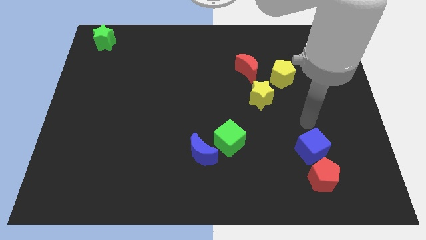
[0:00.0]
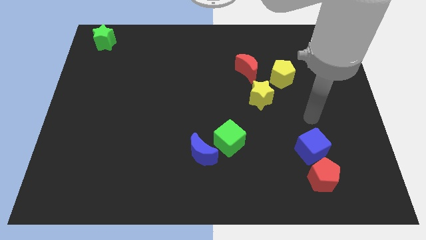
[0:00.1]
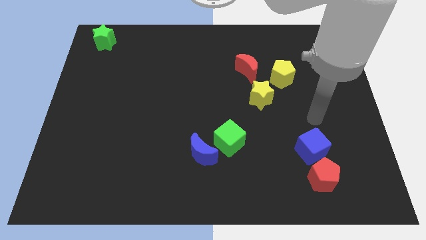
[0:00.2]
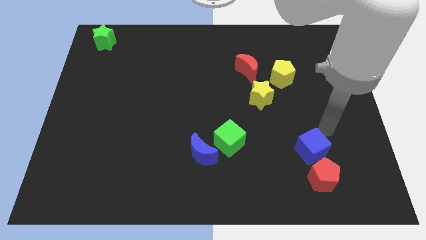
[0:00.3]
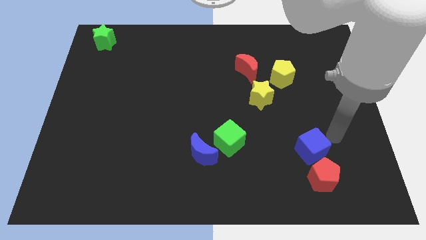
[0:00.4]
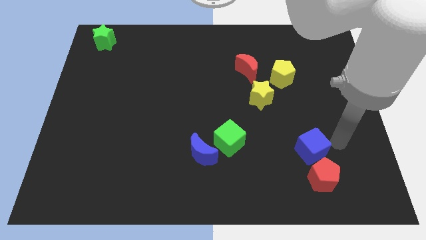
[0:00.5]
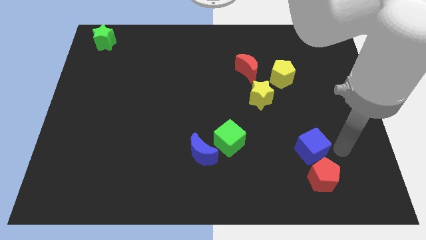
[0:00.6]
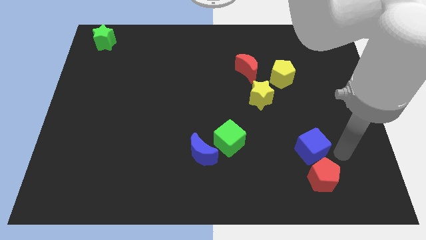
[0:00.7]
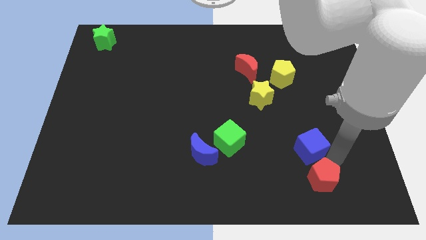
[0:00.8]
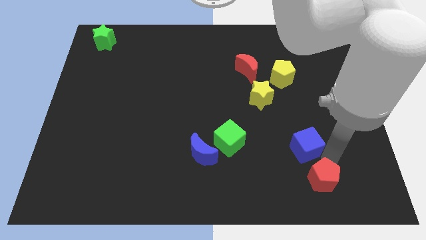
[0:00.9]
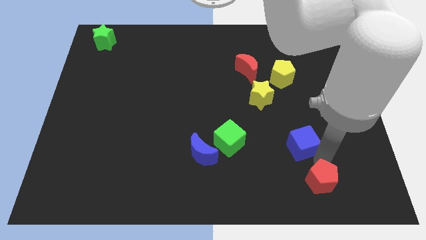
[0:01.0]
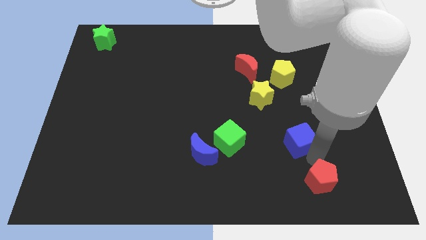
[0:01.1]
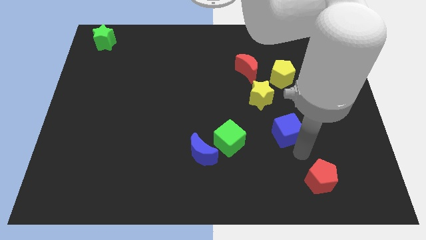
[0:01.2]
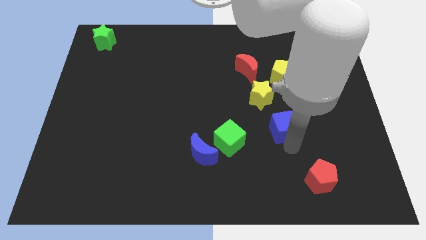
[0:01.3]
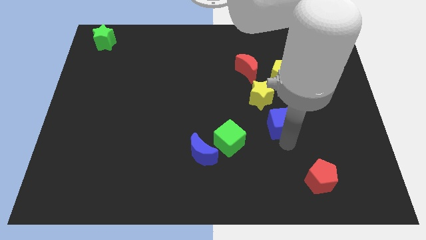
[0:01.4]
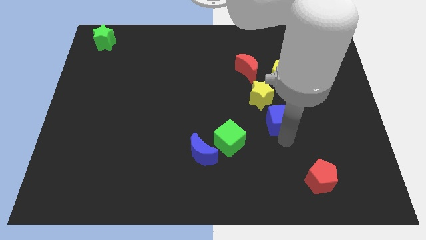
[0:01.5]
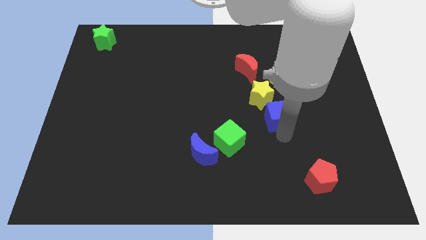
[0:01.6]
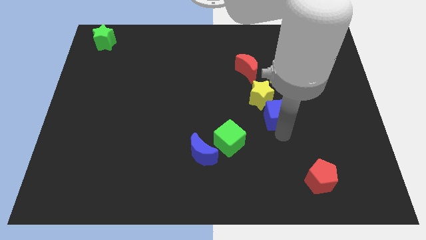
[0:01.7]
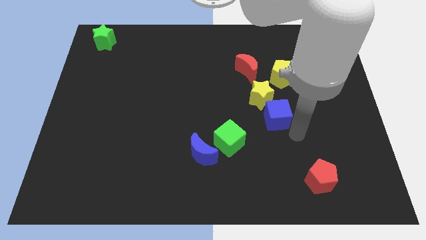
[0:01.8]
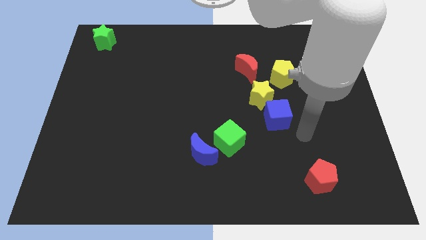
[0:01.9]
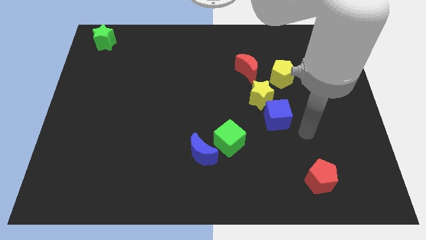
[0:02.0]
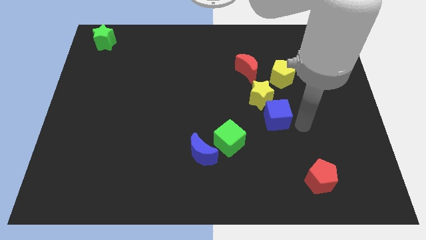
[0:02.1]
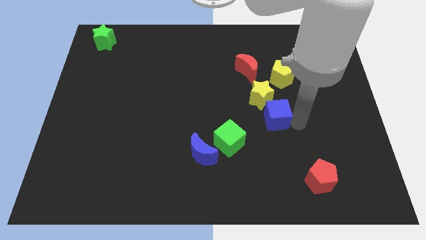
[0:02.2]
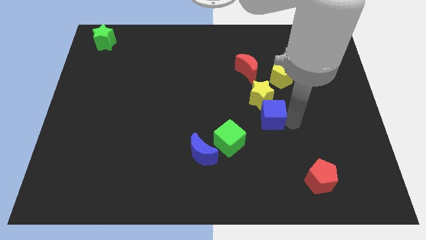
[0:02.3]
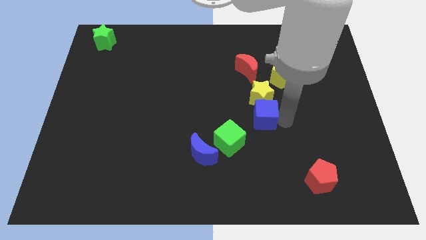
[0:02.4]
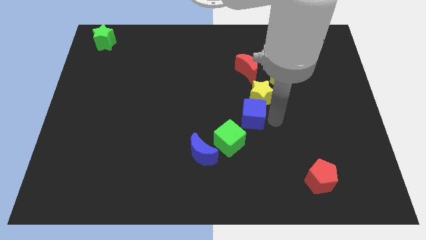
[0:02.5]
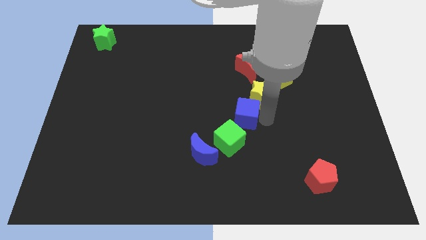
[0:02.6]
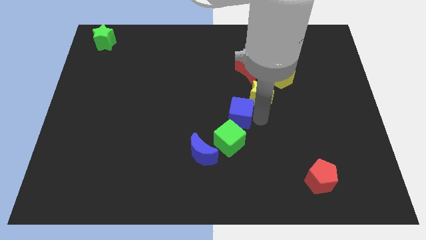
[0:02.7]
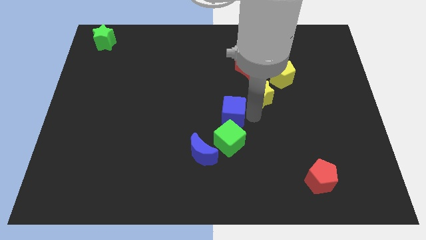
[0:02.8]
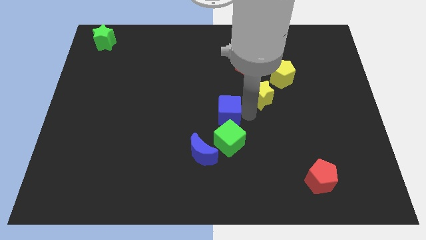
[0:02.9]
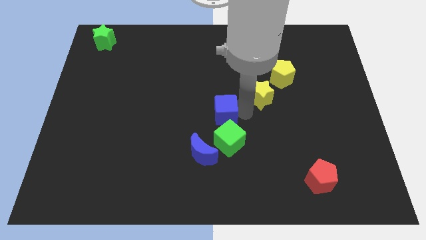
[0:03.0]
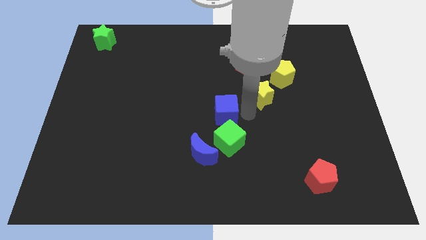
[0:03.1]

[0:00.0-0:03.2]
place the blue cube above the green cube

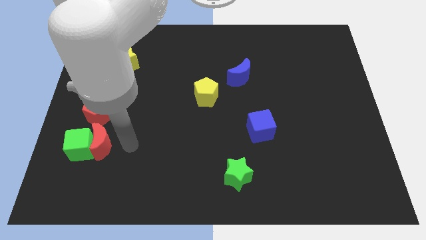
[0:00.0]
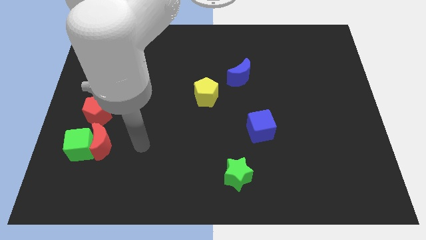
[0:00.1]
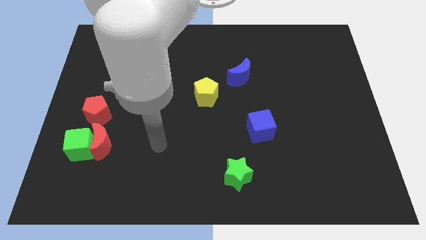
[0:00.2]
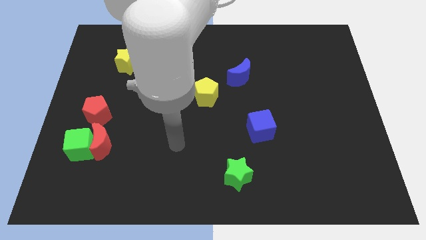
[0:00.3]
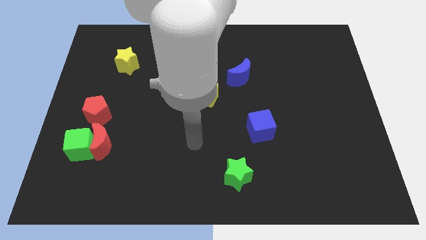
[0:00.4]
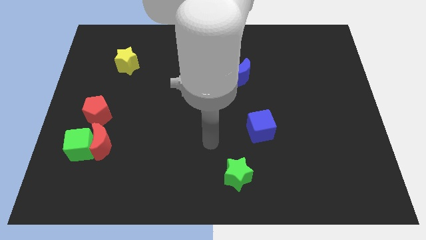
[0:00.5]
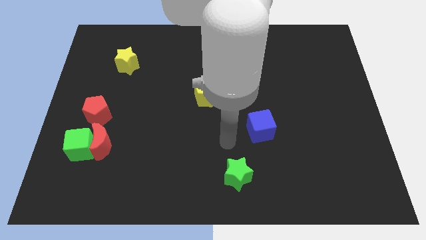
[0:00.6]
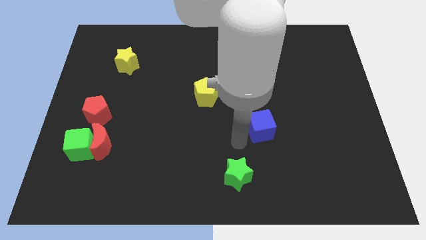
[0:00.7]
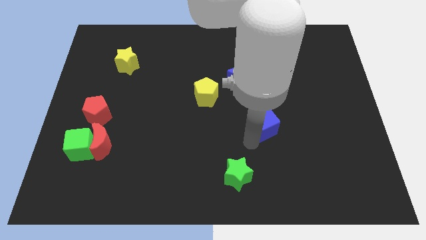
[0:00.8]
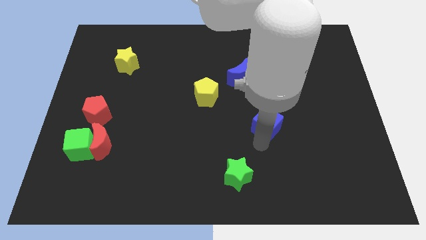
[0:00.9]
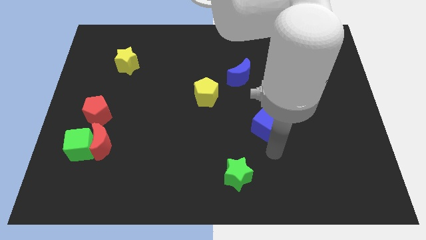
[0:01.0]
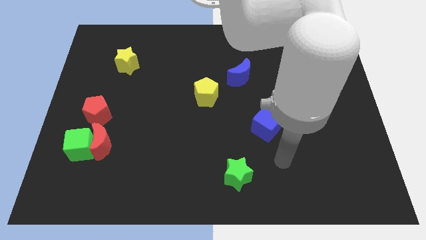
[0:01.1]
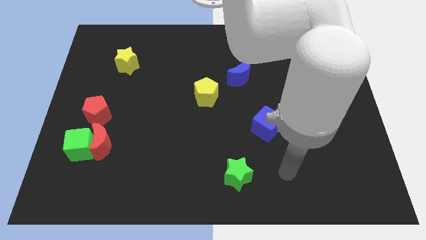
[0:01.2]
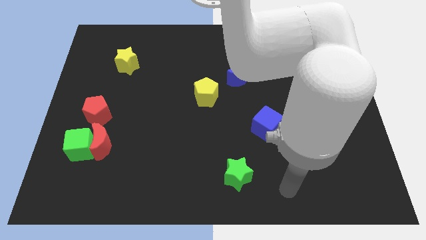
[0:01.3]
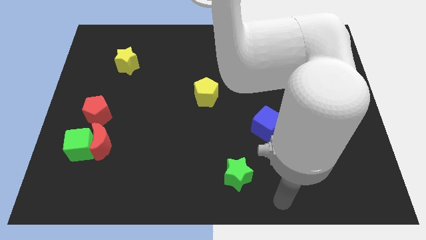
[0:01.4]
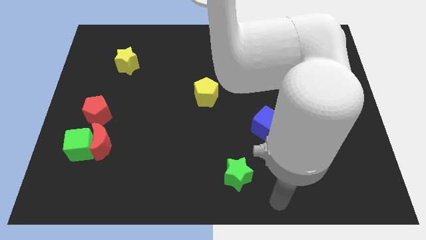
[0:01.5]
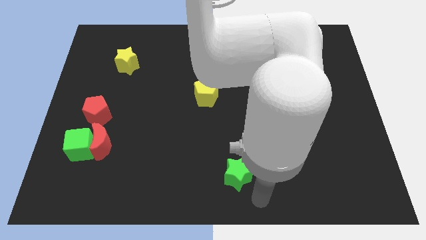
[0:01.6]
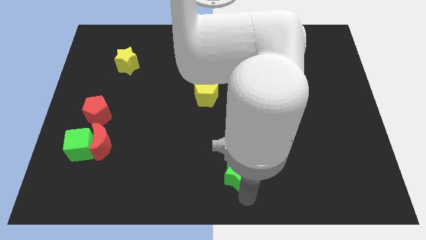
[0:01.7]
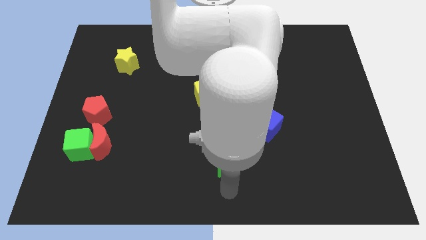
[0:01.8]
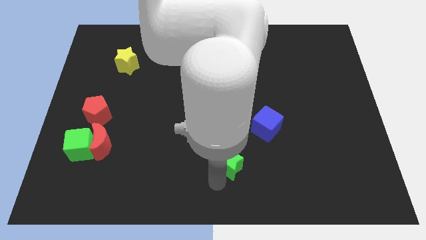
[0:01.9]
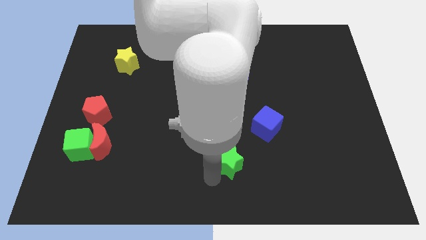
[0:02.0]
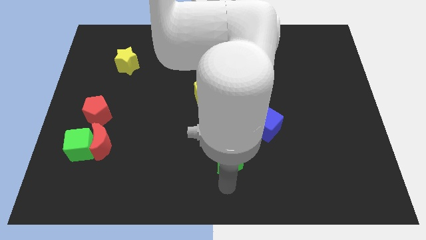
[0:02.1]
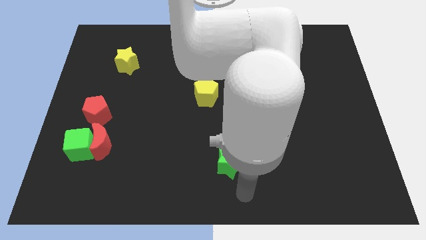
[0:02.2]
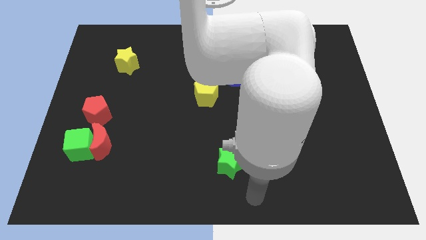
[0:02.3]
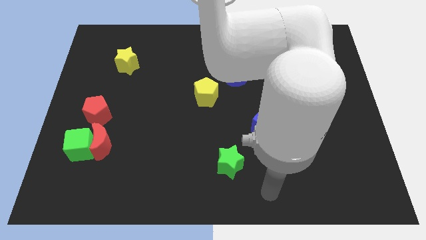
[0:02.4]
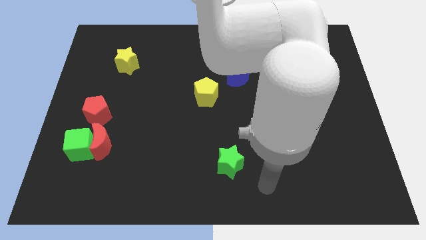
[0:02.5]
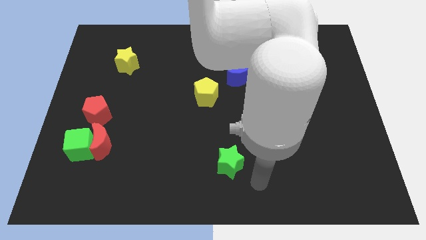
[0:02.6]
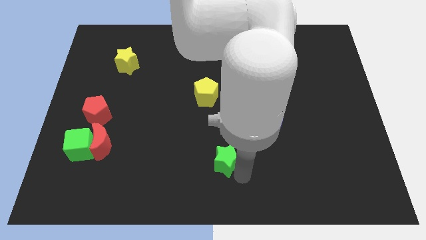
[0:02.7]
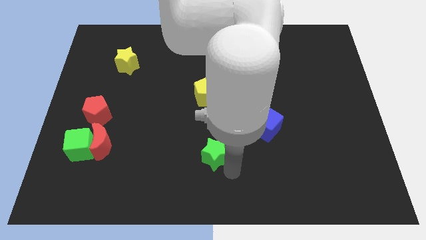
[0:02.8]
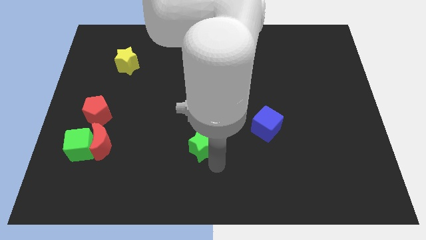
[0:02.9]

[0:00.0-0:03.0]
push green star below yellow pentagon

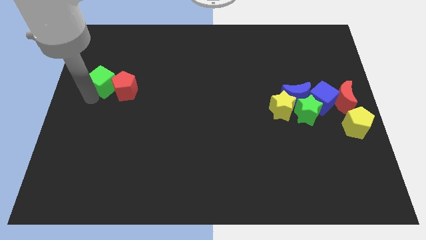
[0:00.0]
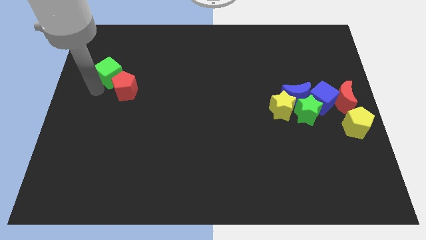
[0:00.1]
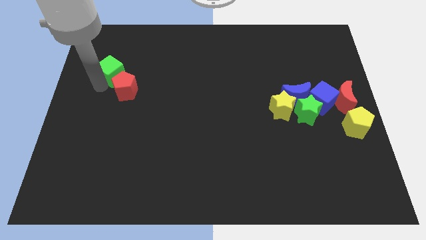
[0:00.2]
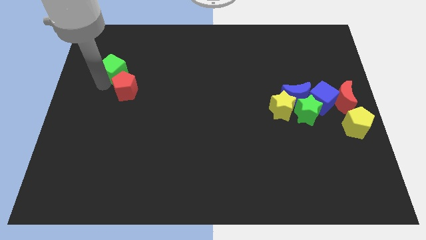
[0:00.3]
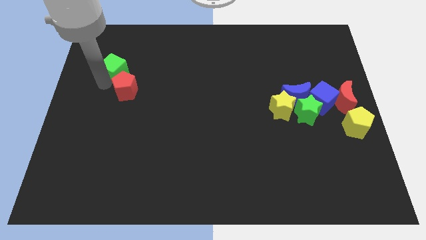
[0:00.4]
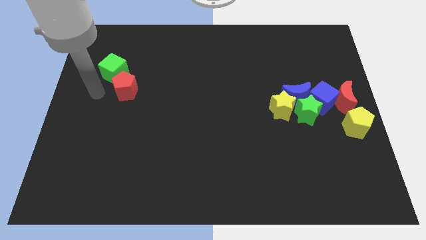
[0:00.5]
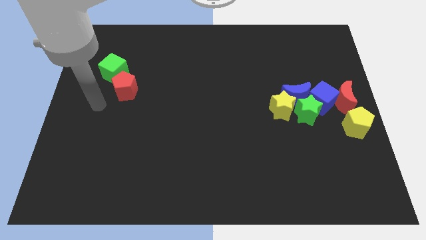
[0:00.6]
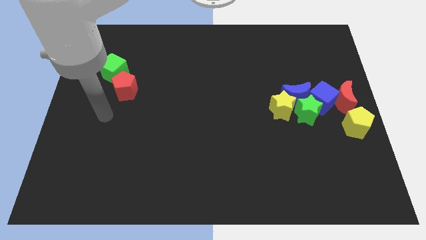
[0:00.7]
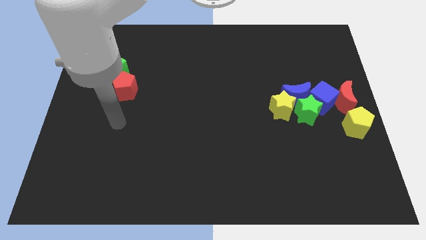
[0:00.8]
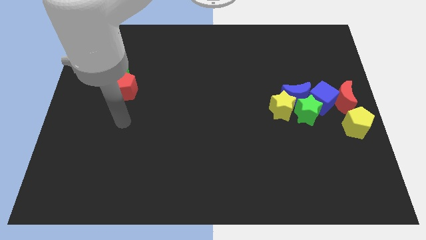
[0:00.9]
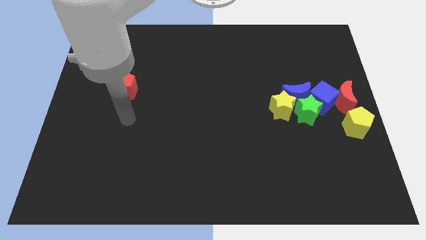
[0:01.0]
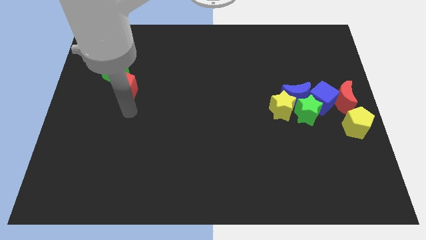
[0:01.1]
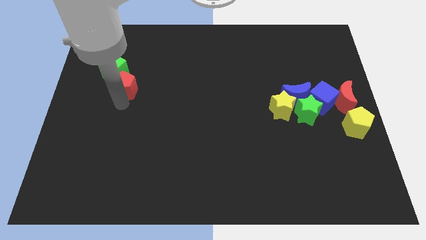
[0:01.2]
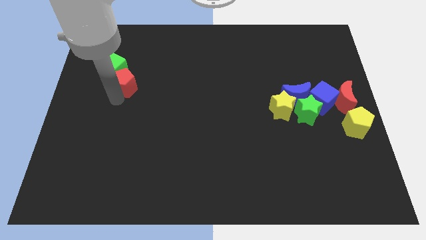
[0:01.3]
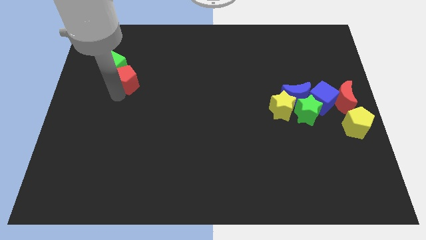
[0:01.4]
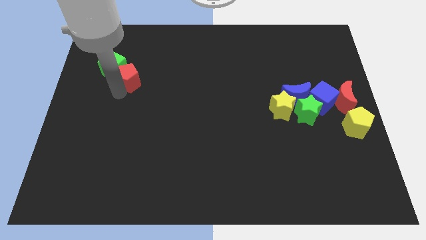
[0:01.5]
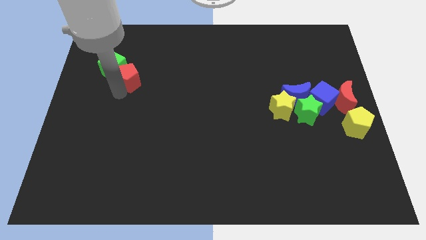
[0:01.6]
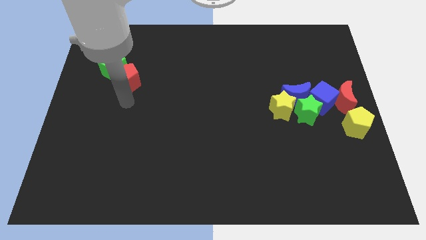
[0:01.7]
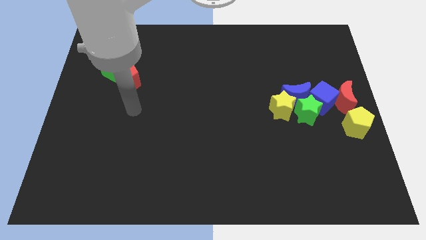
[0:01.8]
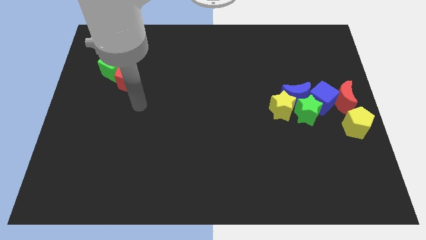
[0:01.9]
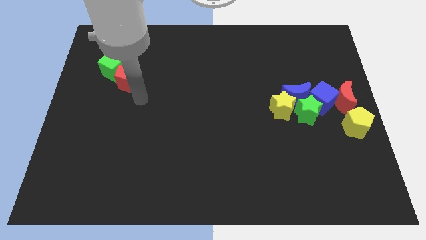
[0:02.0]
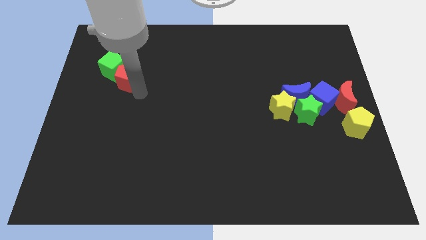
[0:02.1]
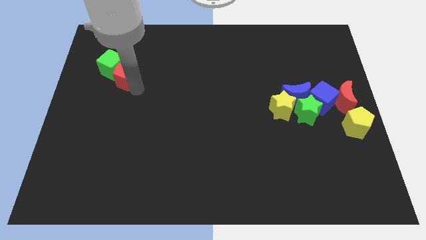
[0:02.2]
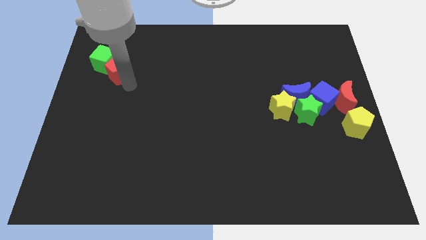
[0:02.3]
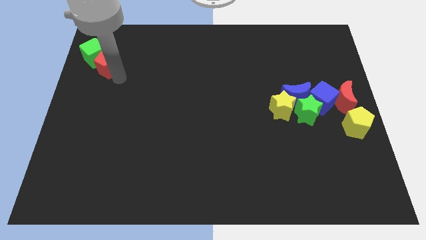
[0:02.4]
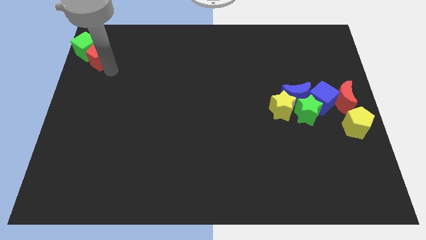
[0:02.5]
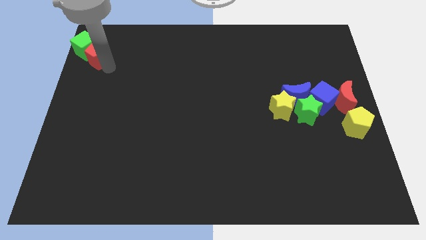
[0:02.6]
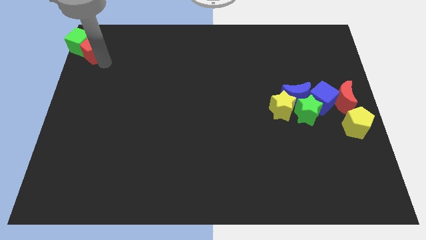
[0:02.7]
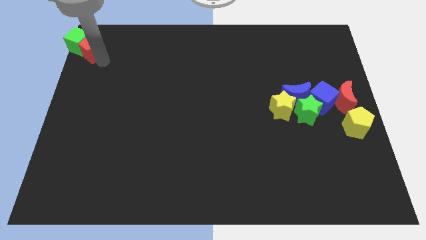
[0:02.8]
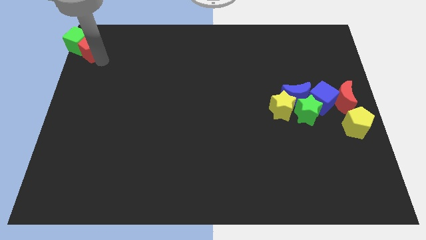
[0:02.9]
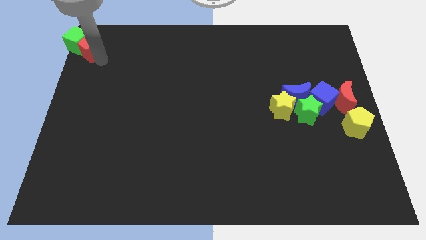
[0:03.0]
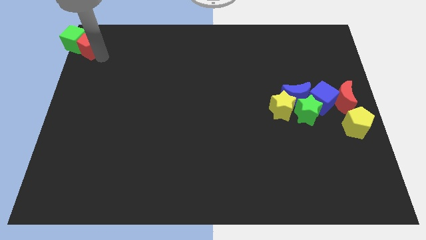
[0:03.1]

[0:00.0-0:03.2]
drag the red pentagon and green cube to the top left
